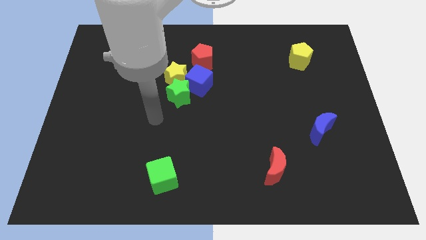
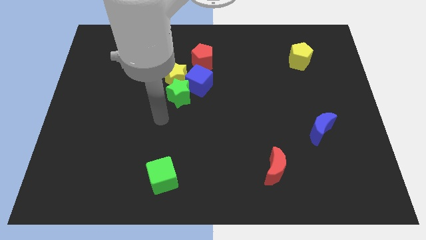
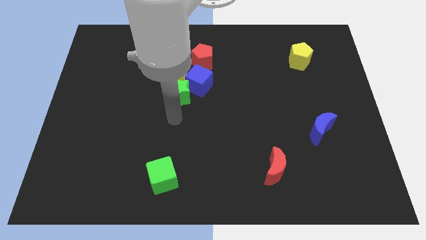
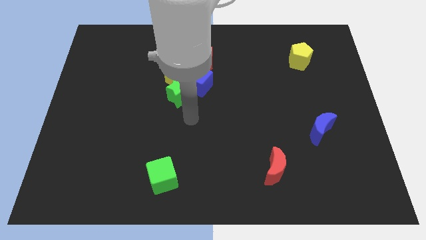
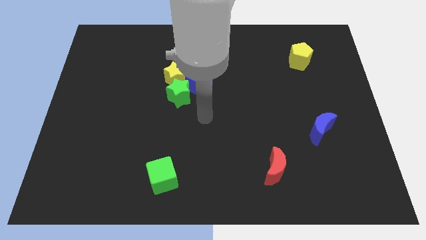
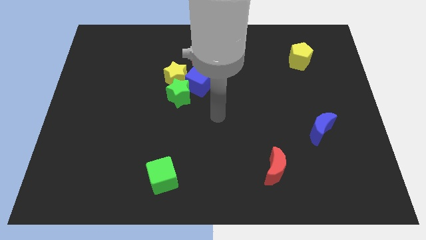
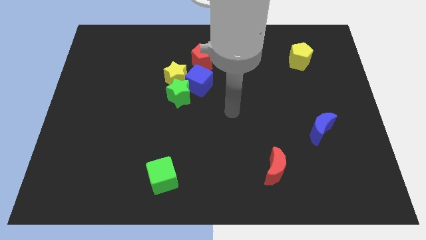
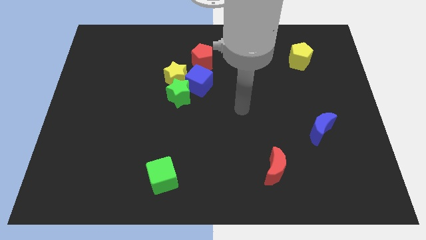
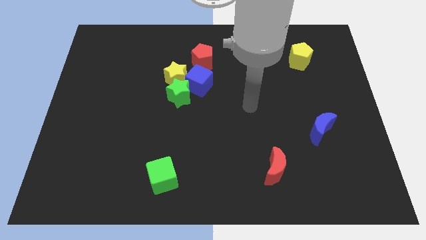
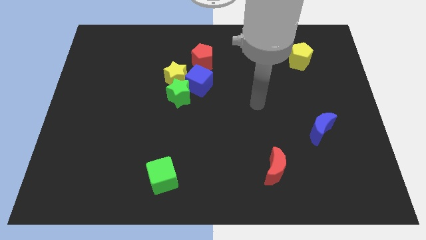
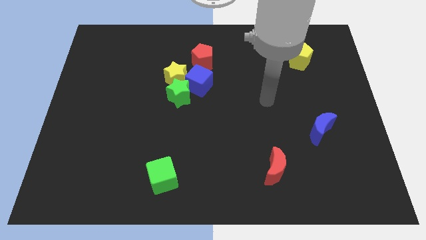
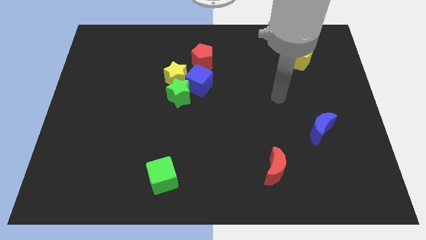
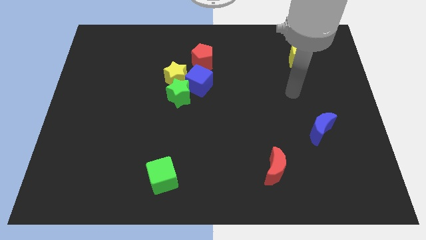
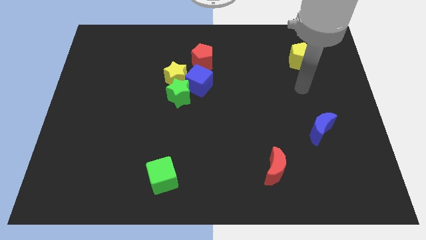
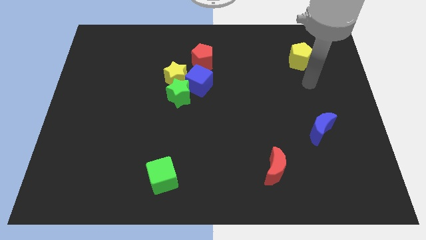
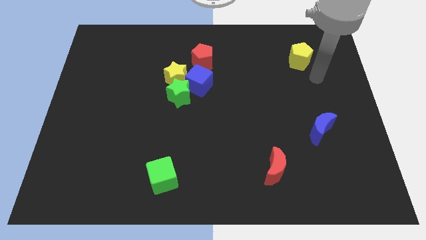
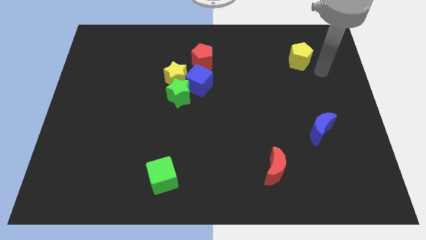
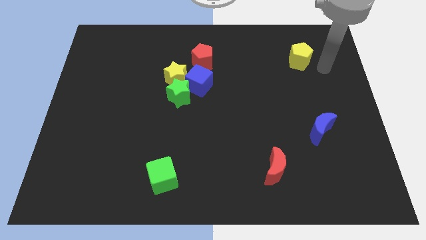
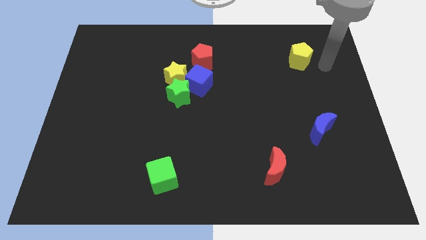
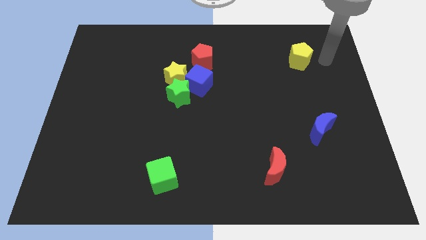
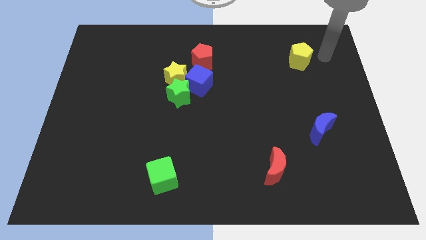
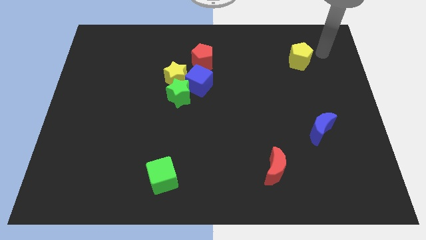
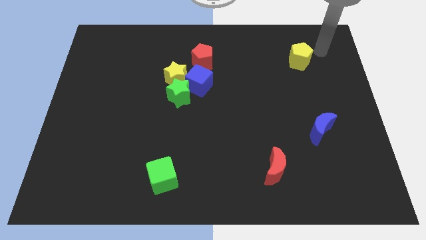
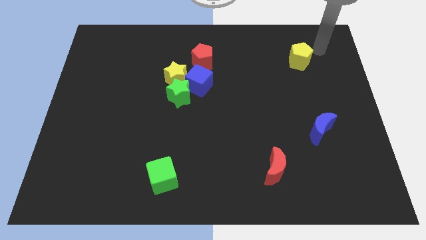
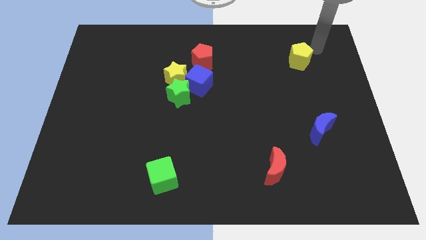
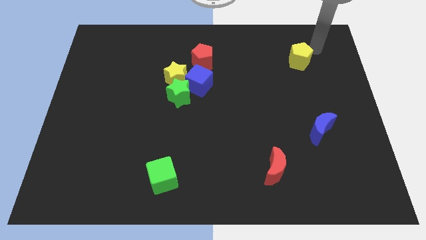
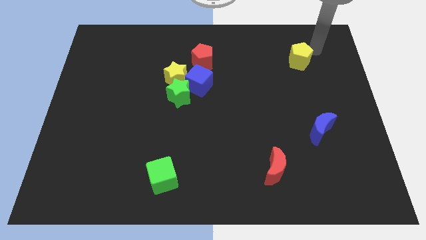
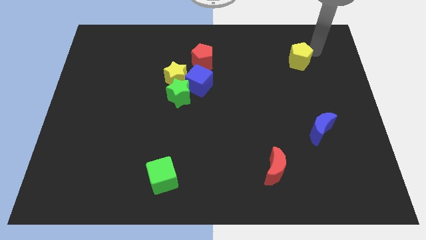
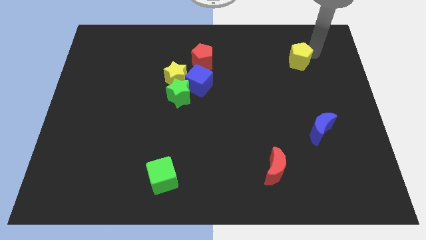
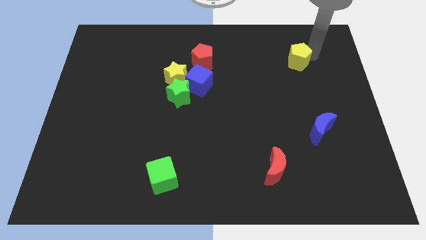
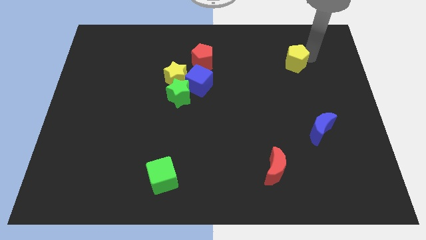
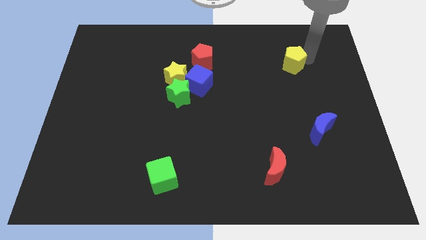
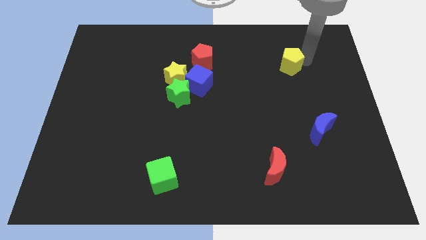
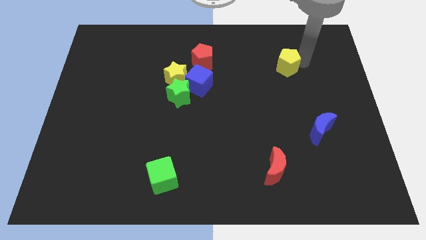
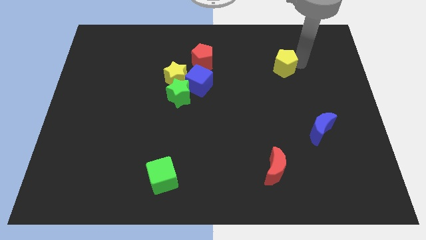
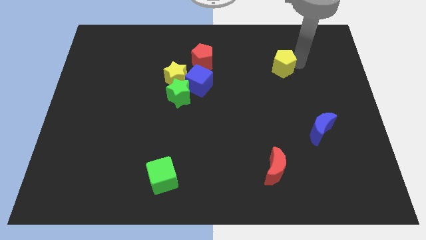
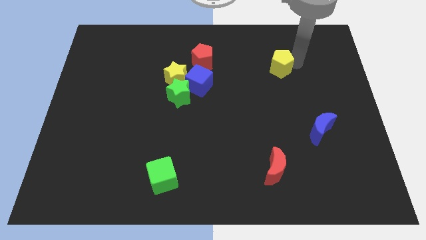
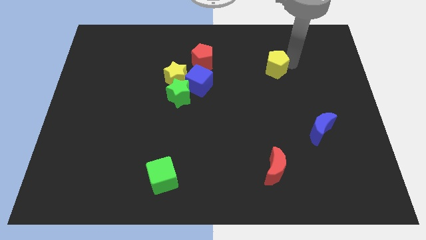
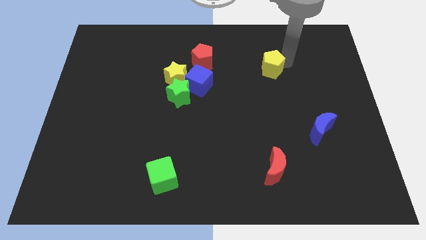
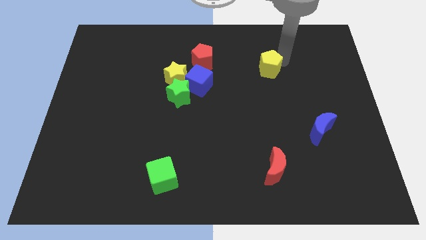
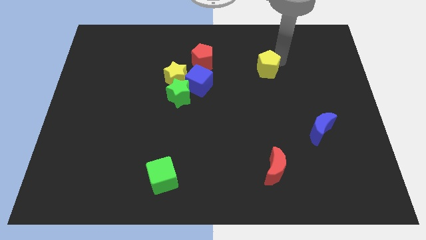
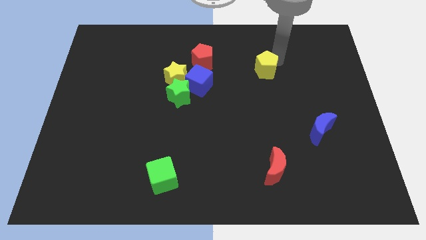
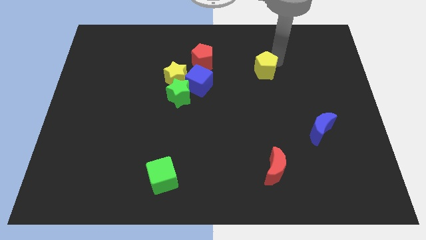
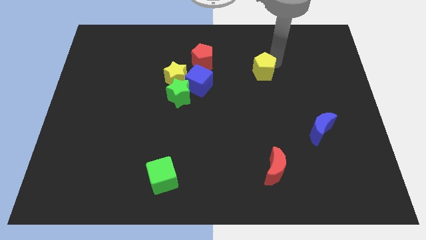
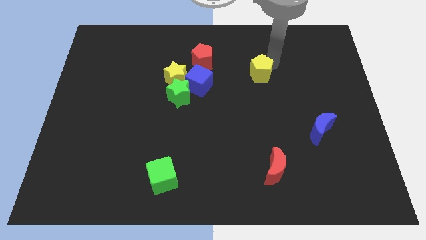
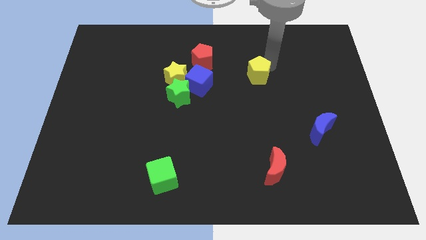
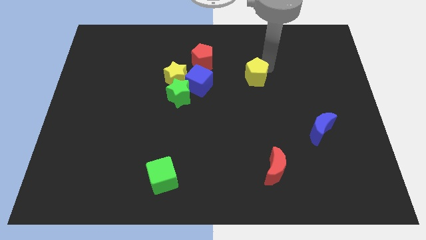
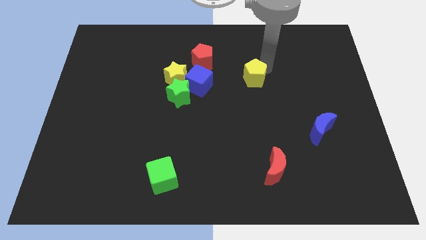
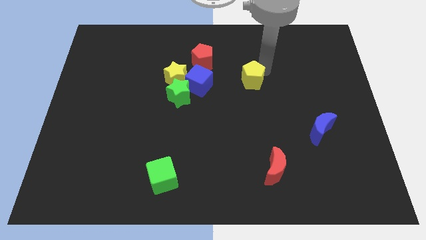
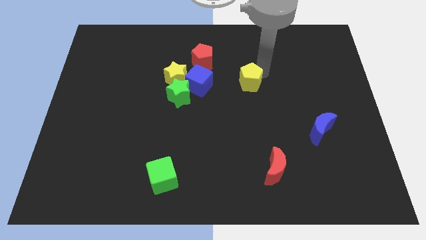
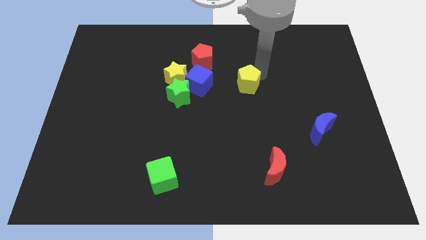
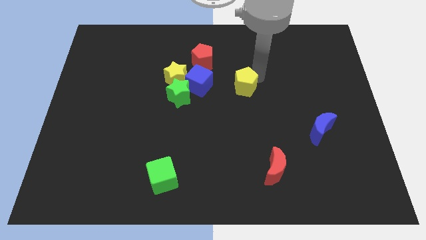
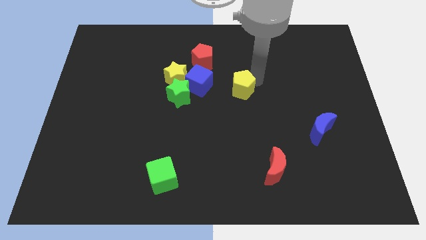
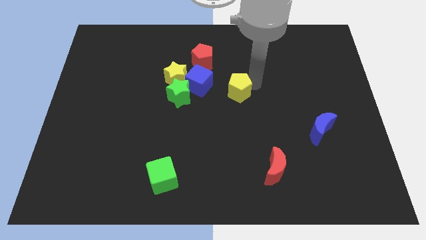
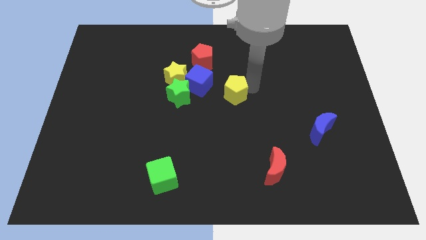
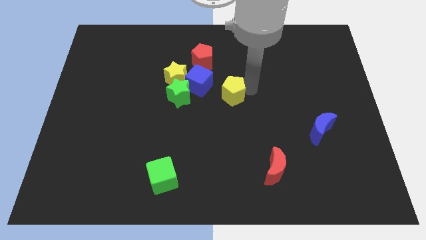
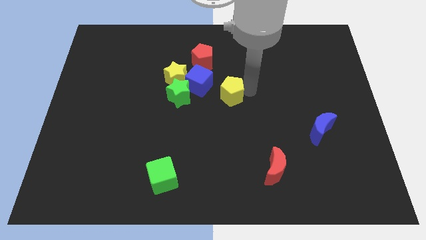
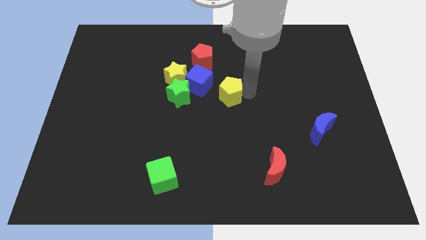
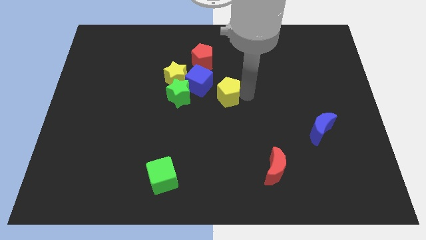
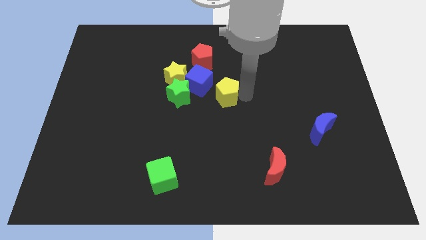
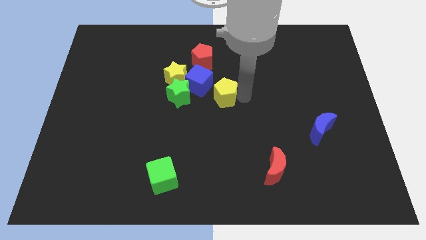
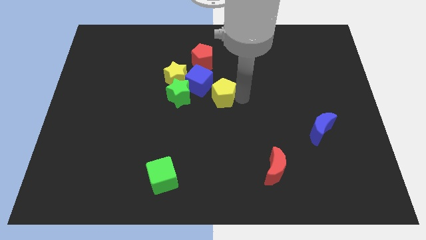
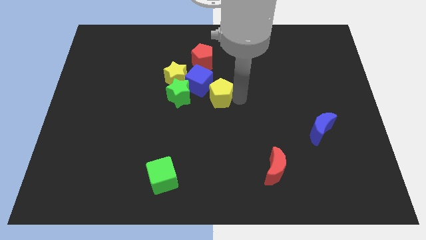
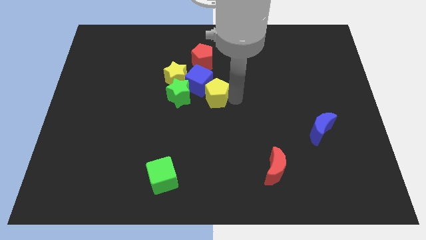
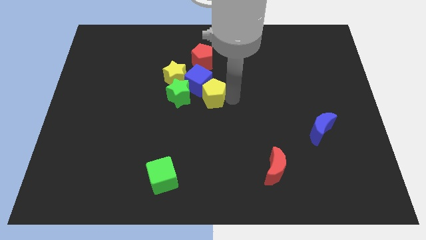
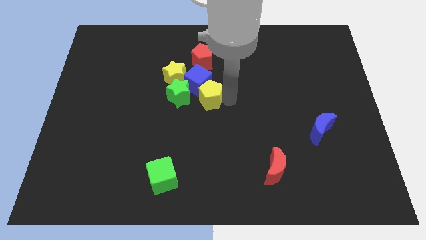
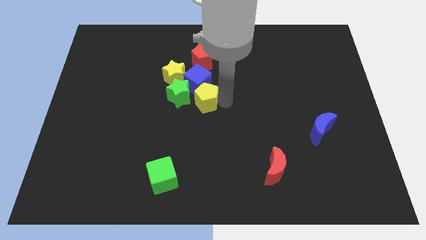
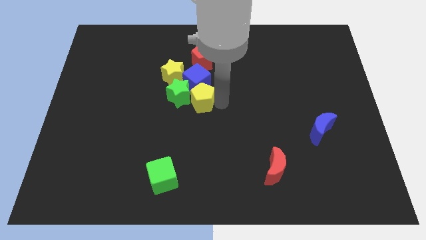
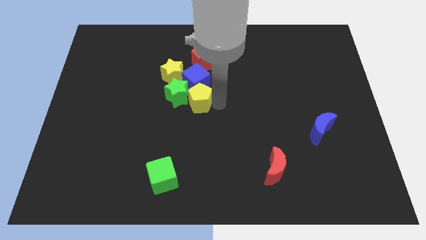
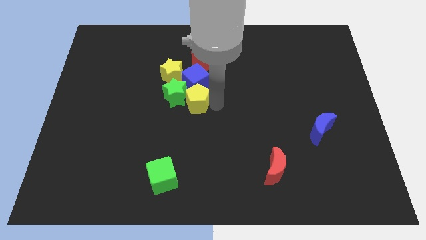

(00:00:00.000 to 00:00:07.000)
slide the yellow pentagon towards the green star

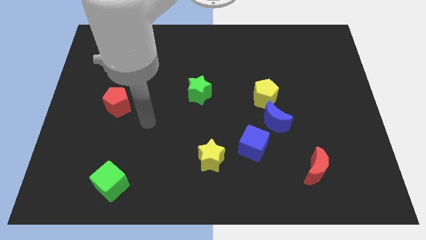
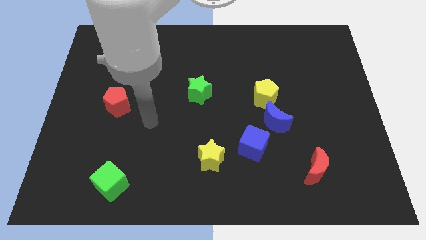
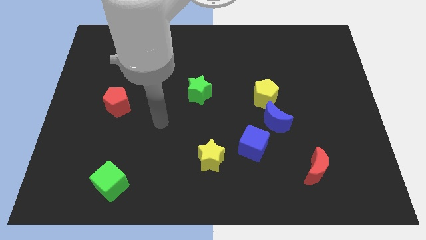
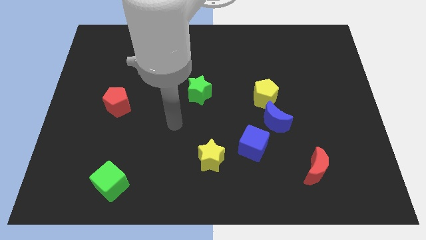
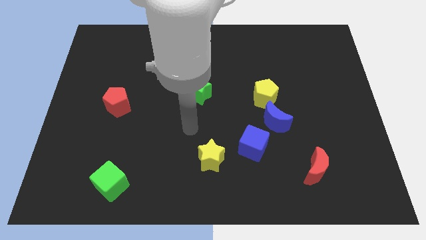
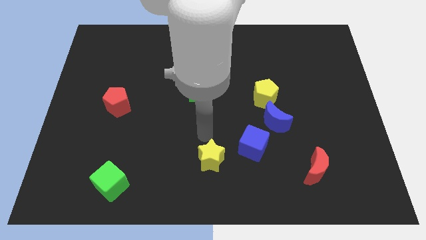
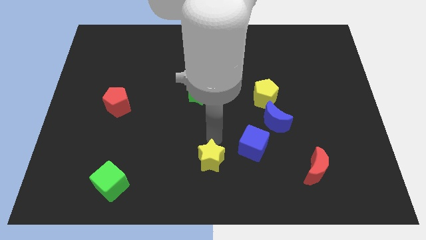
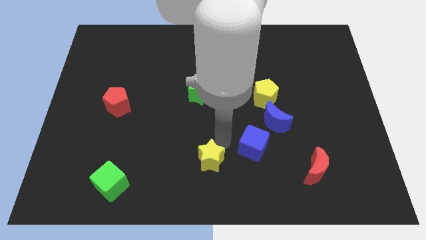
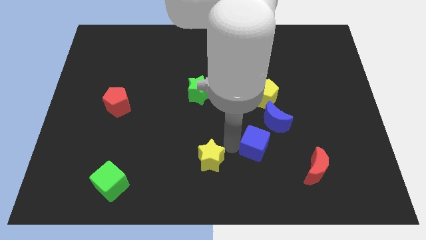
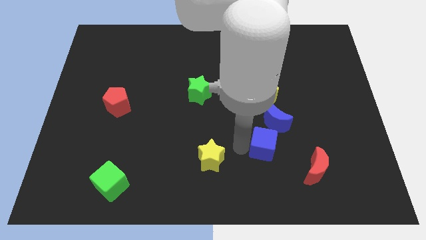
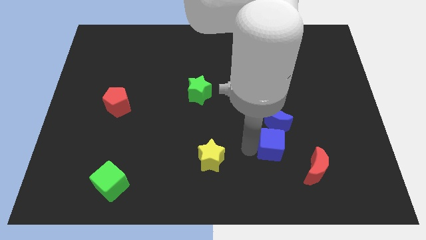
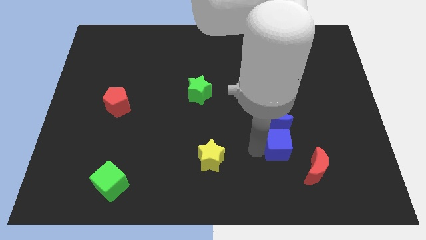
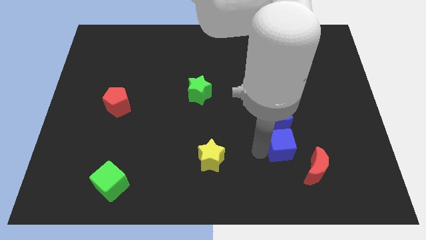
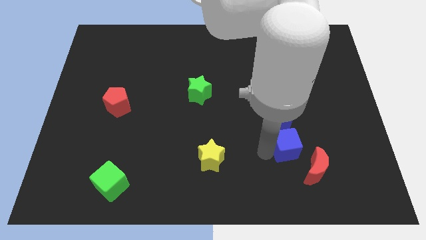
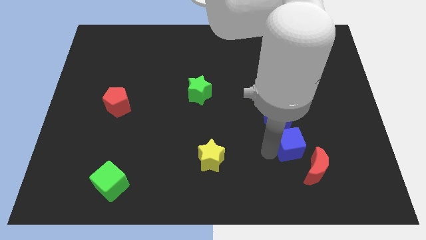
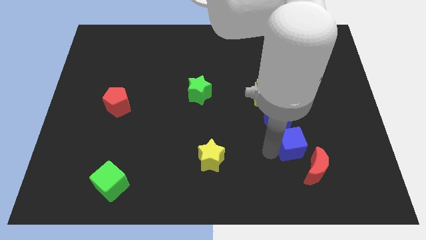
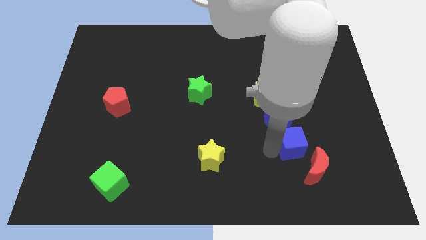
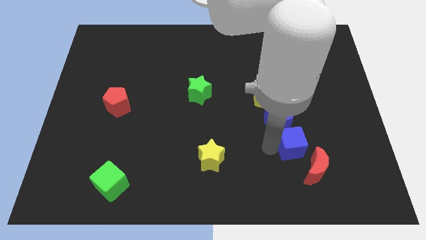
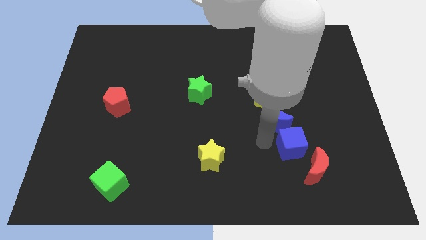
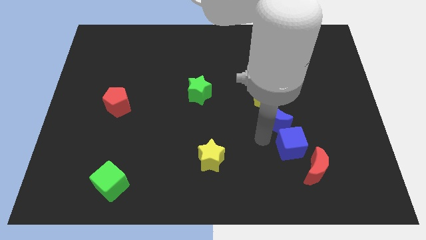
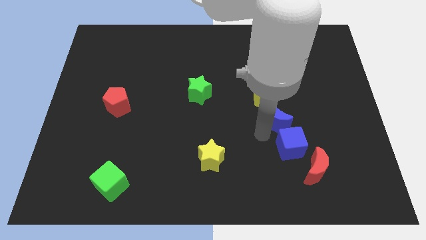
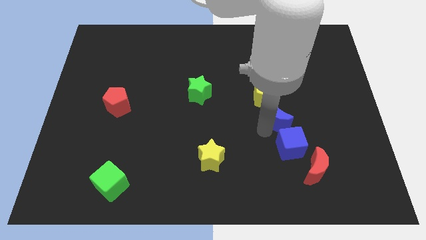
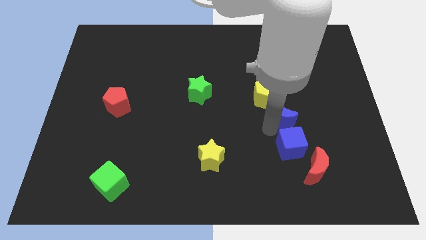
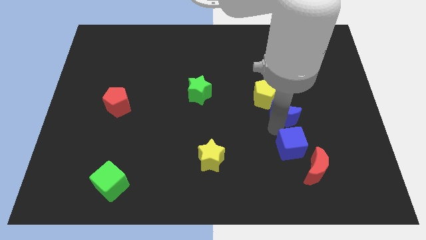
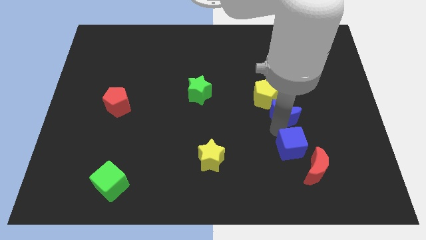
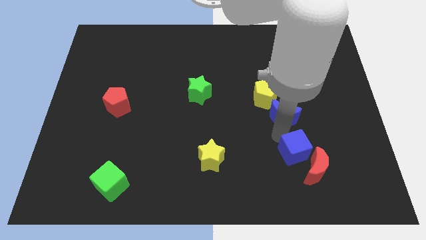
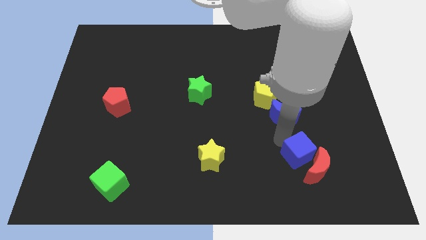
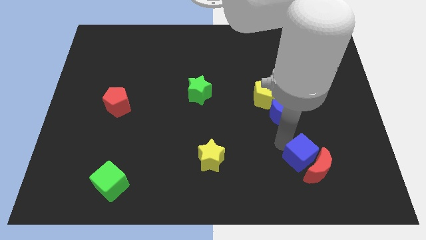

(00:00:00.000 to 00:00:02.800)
put the blue cube close to the red moon
